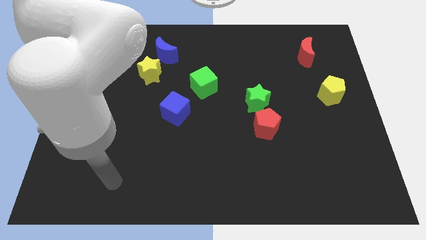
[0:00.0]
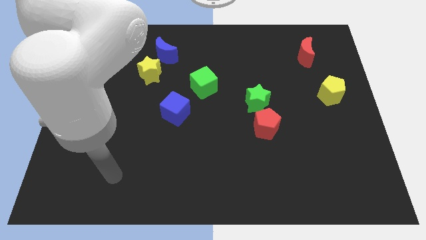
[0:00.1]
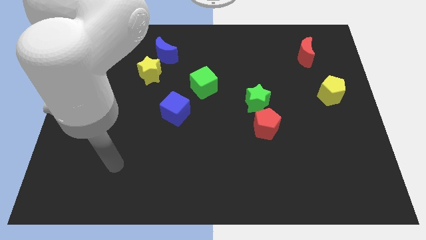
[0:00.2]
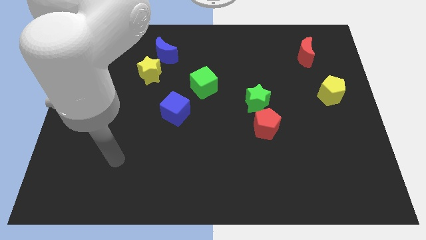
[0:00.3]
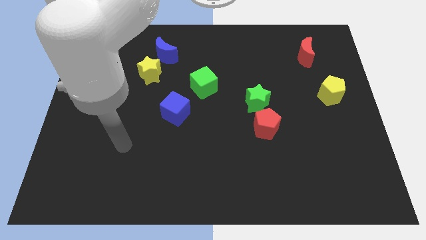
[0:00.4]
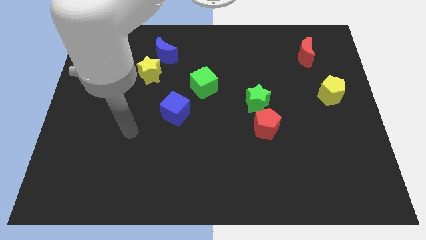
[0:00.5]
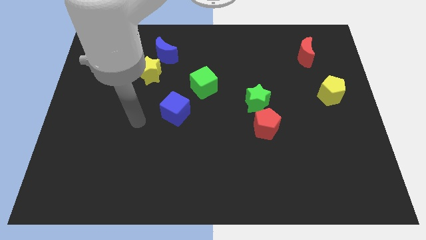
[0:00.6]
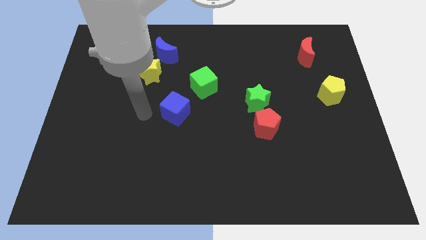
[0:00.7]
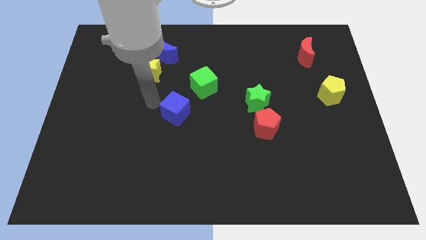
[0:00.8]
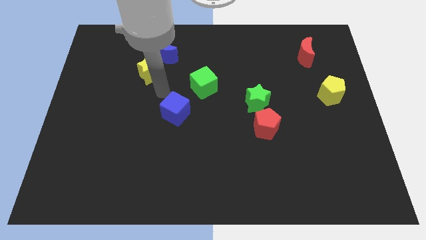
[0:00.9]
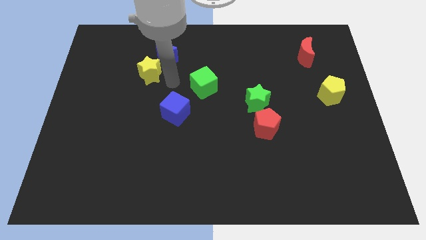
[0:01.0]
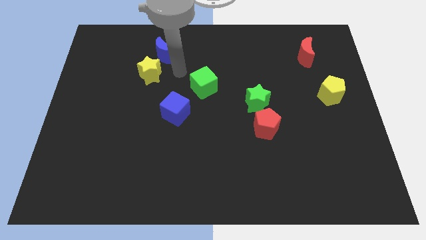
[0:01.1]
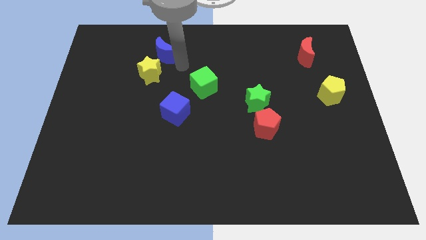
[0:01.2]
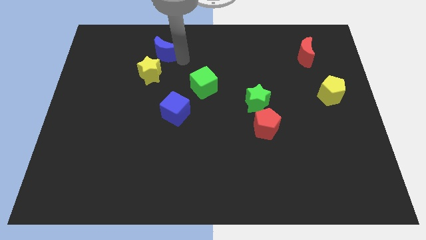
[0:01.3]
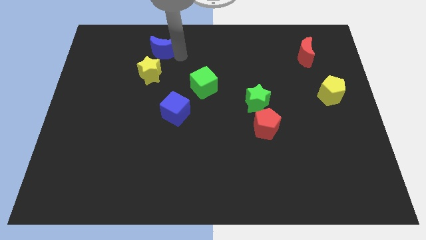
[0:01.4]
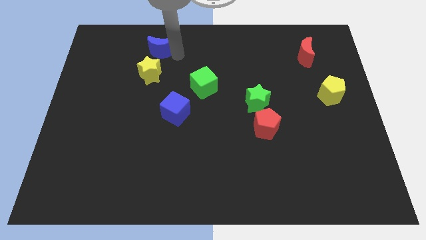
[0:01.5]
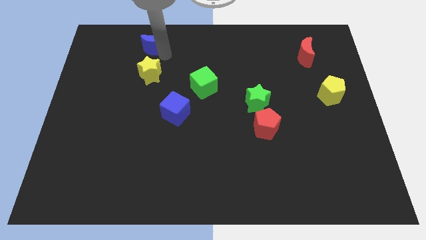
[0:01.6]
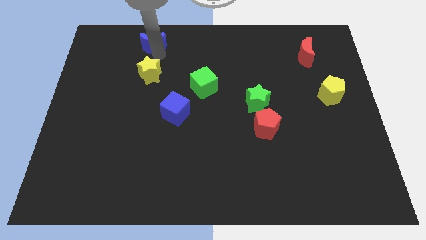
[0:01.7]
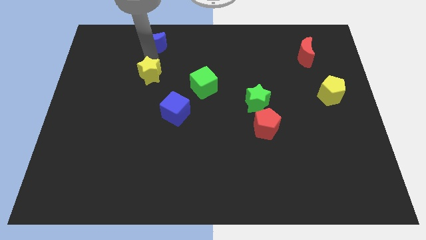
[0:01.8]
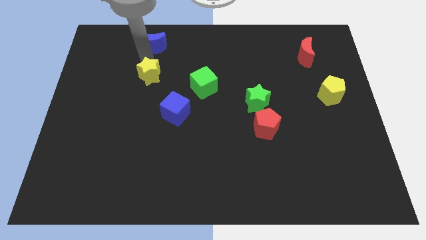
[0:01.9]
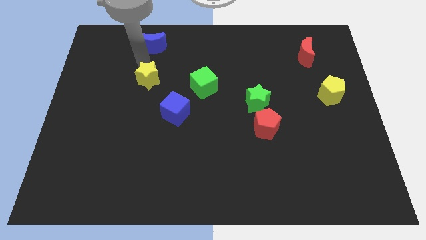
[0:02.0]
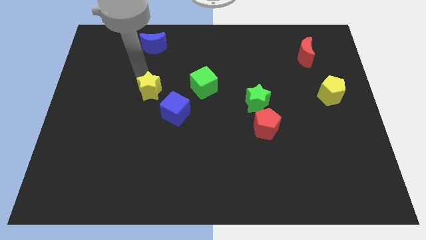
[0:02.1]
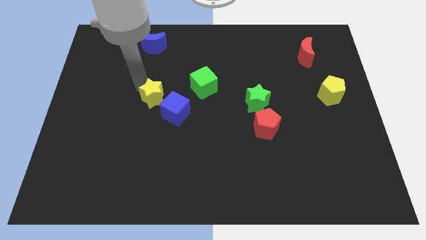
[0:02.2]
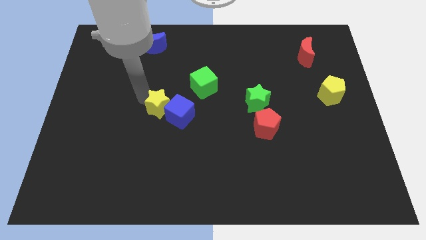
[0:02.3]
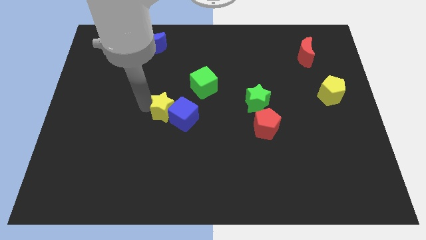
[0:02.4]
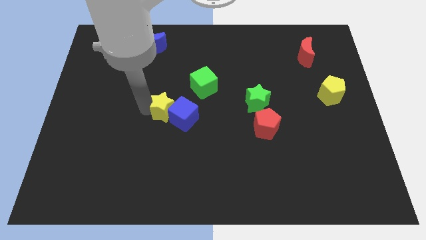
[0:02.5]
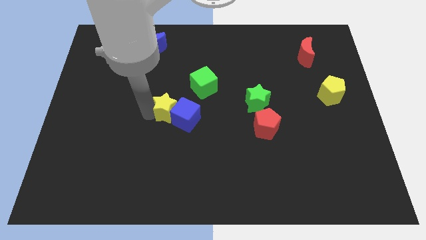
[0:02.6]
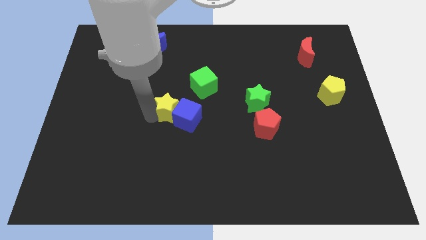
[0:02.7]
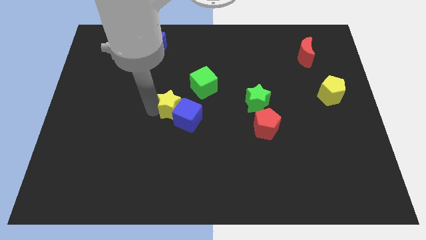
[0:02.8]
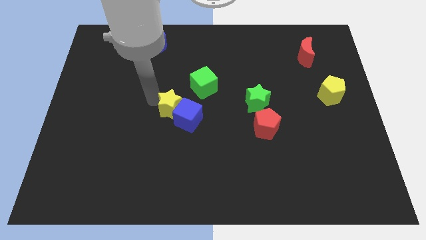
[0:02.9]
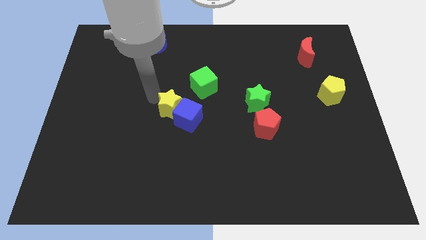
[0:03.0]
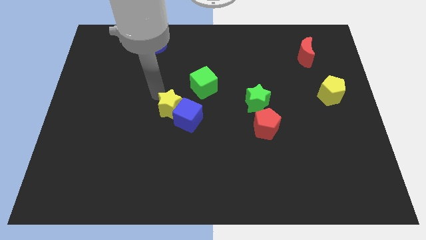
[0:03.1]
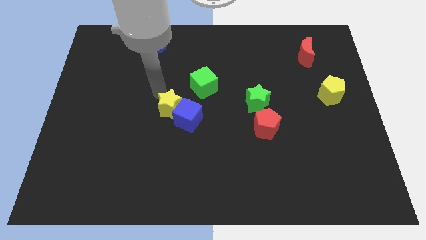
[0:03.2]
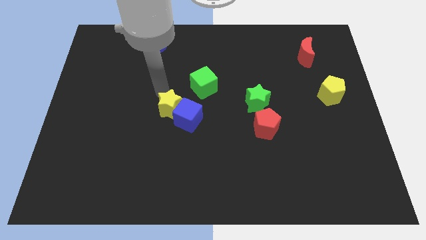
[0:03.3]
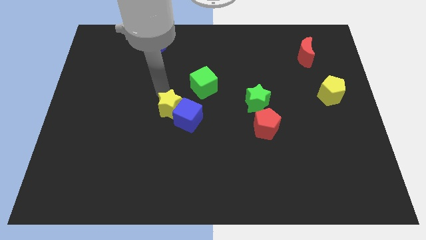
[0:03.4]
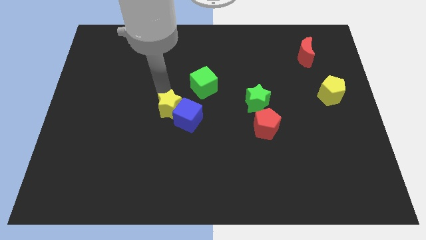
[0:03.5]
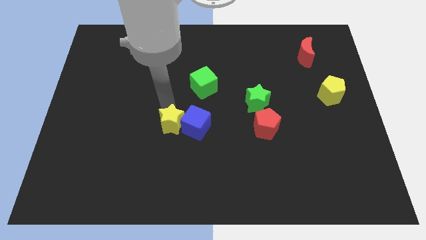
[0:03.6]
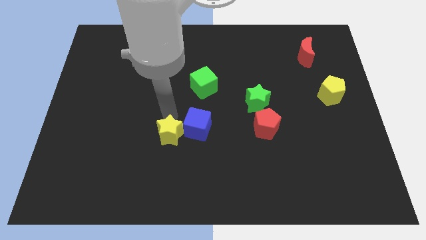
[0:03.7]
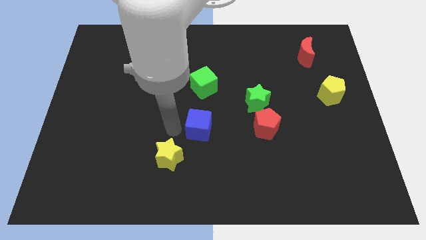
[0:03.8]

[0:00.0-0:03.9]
put the yellow star on the bottom left side of the blue cube

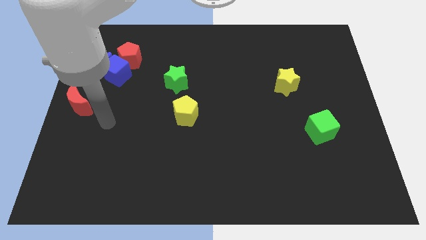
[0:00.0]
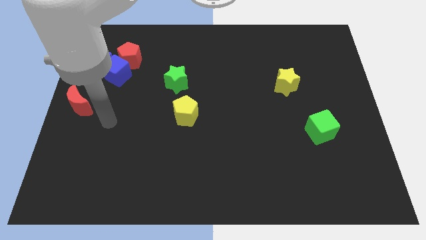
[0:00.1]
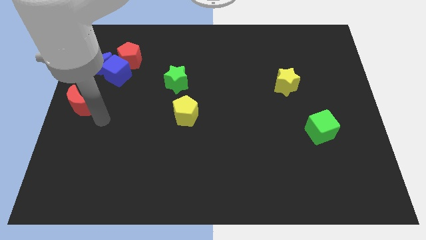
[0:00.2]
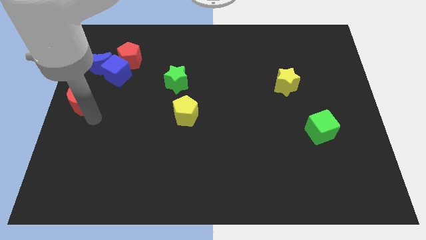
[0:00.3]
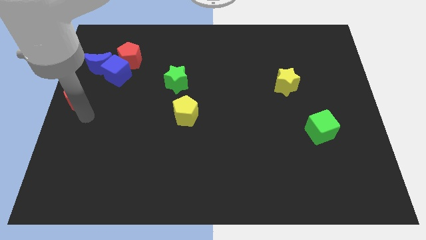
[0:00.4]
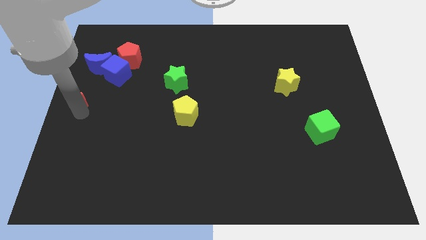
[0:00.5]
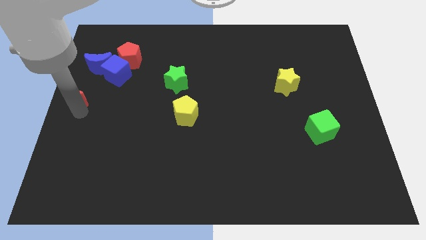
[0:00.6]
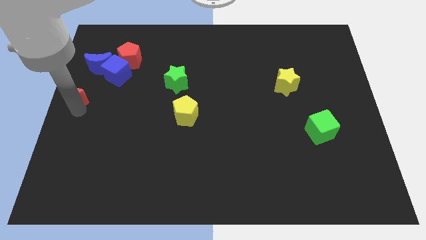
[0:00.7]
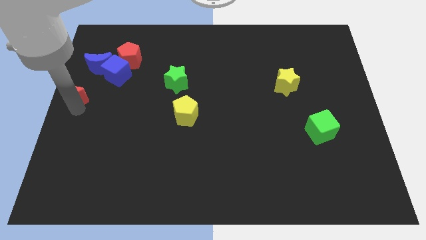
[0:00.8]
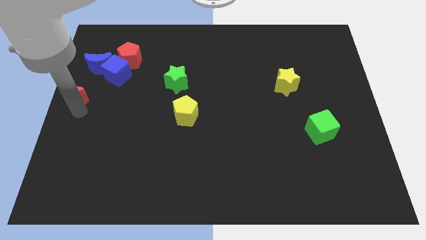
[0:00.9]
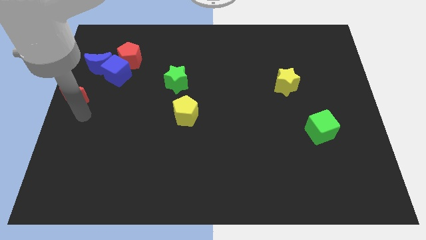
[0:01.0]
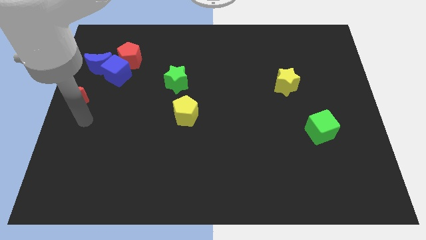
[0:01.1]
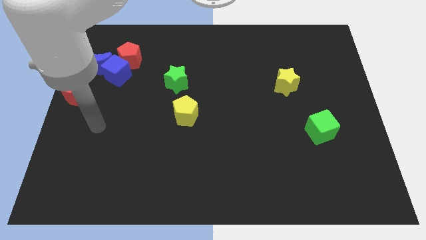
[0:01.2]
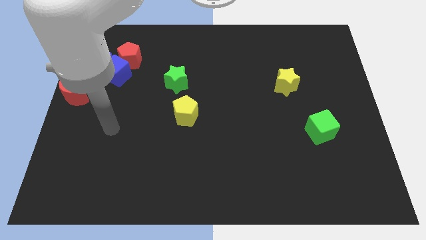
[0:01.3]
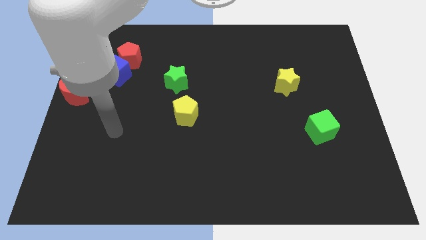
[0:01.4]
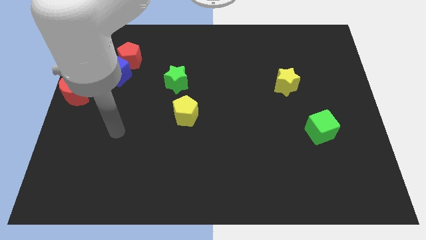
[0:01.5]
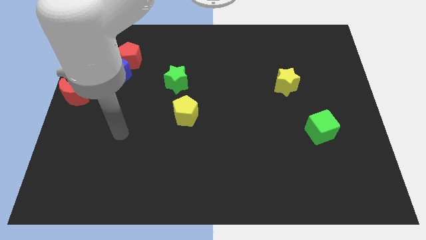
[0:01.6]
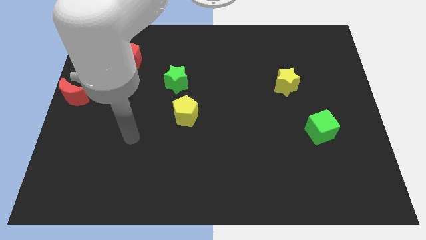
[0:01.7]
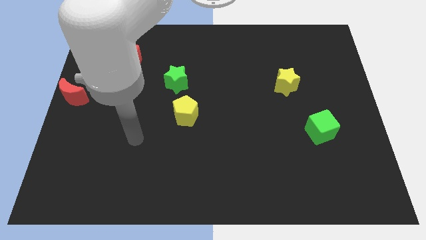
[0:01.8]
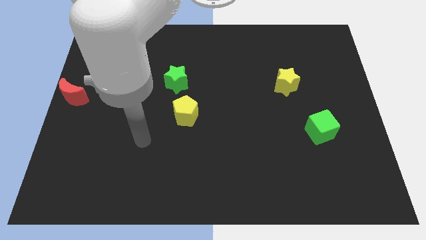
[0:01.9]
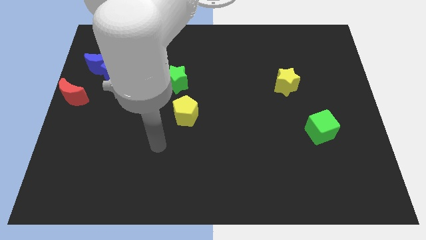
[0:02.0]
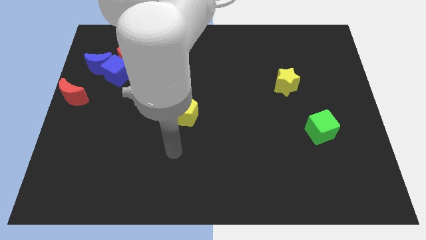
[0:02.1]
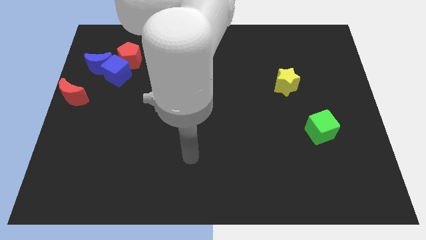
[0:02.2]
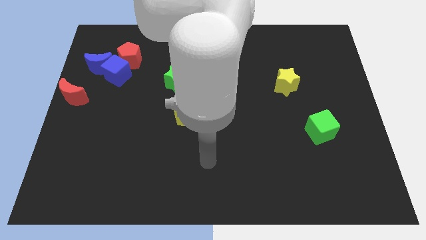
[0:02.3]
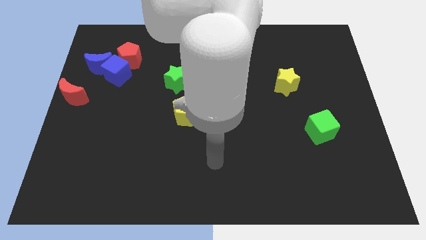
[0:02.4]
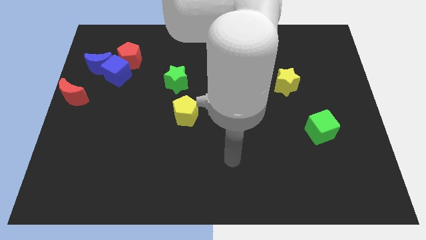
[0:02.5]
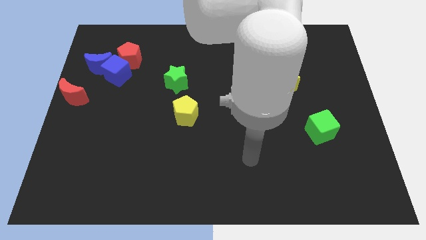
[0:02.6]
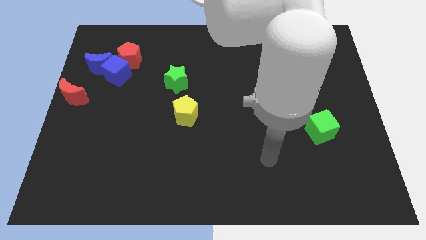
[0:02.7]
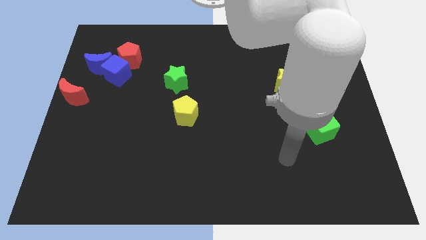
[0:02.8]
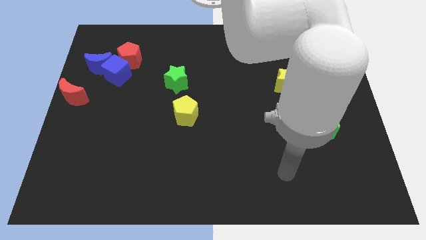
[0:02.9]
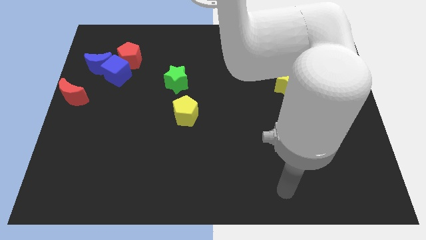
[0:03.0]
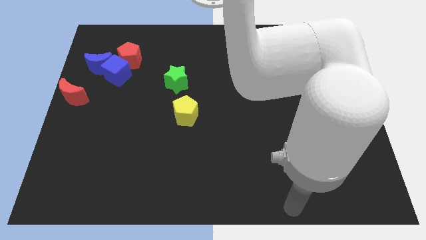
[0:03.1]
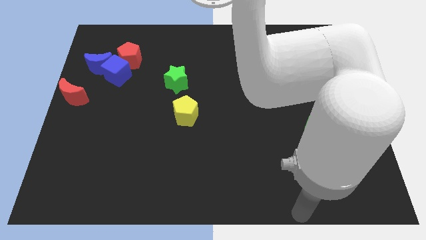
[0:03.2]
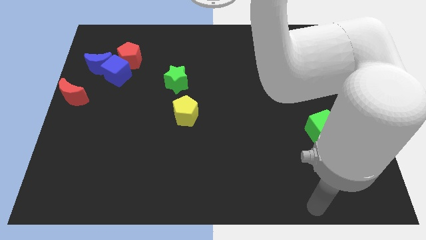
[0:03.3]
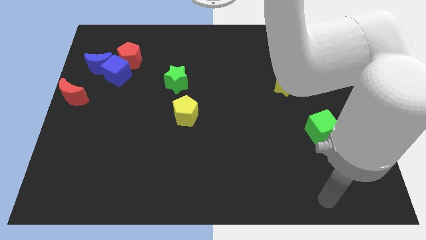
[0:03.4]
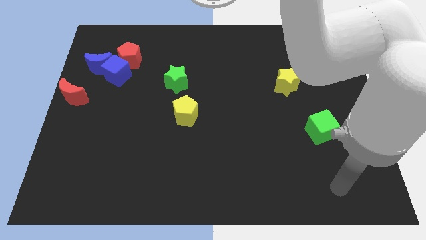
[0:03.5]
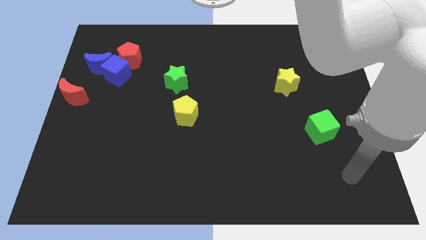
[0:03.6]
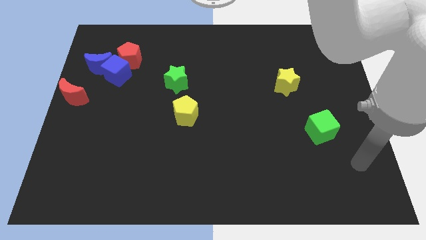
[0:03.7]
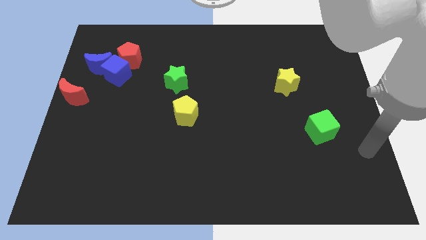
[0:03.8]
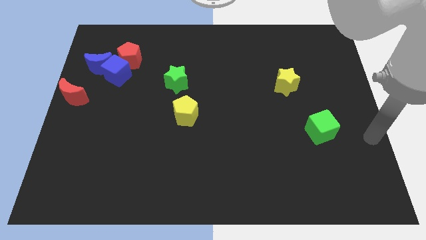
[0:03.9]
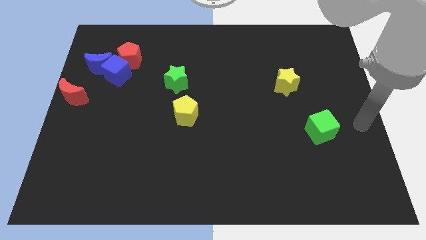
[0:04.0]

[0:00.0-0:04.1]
place your arm to the right of the green cube

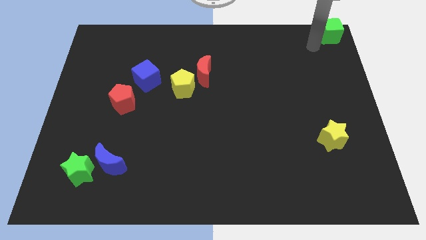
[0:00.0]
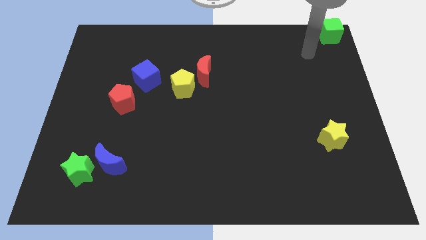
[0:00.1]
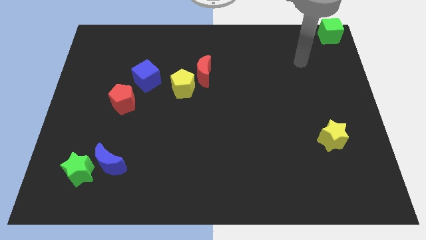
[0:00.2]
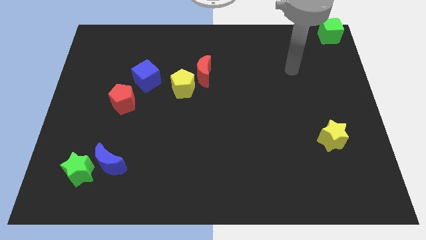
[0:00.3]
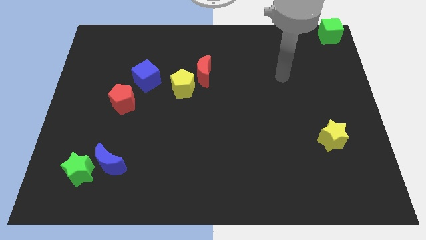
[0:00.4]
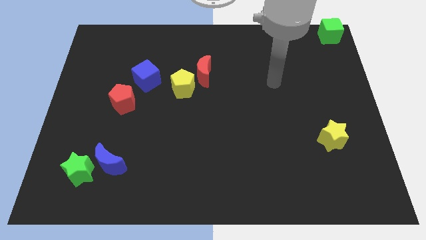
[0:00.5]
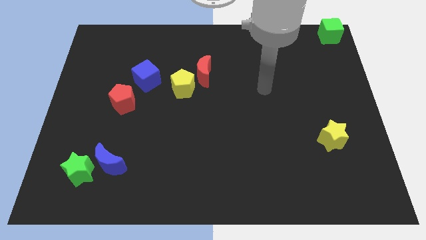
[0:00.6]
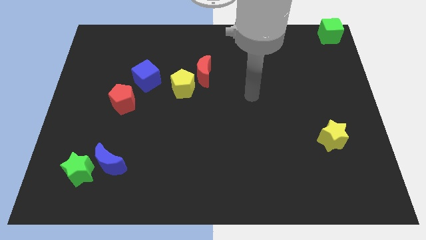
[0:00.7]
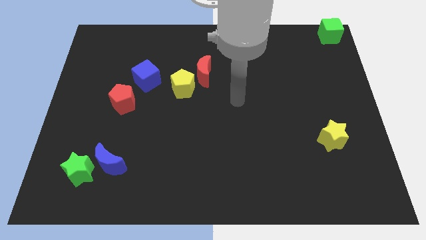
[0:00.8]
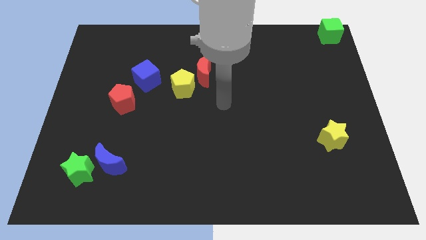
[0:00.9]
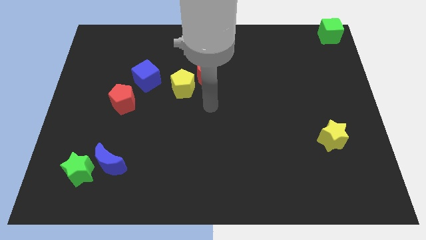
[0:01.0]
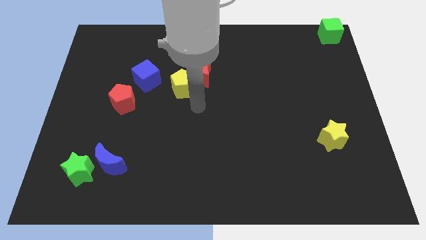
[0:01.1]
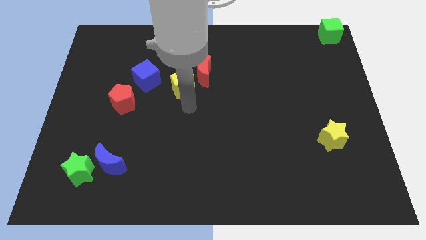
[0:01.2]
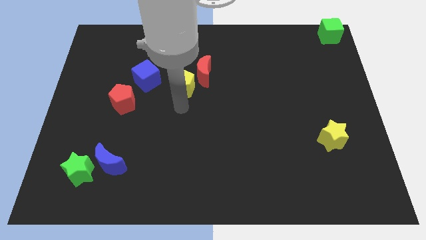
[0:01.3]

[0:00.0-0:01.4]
move your hand towards the yellow pentagon
